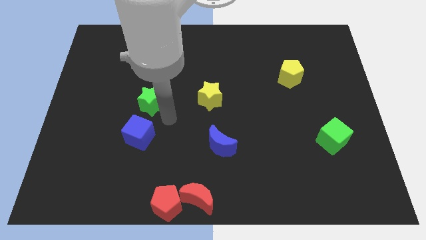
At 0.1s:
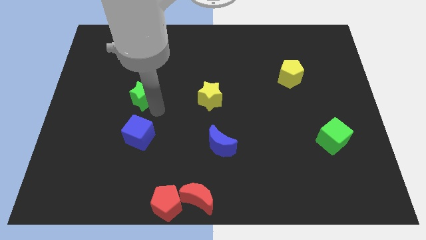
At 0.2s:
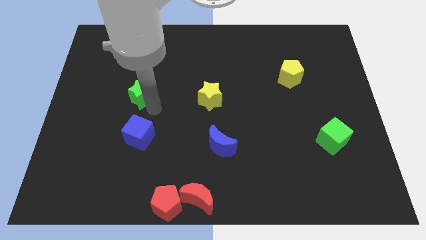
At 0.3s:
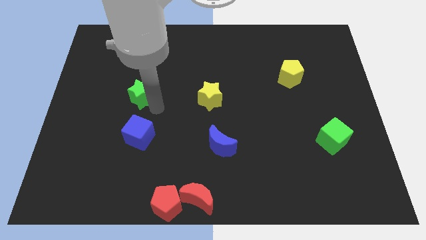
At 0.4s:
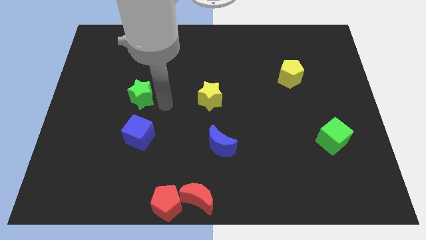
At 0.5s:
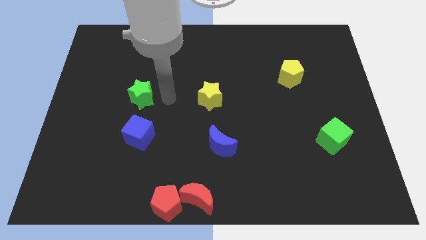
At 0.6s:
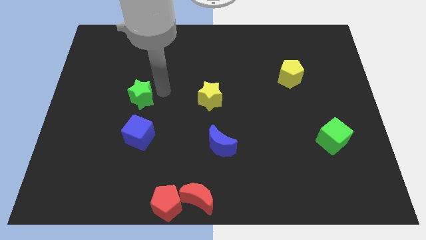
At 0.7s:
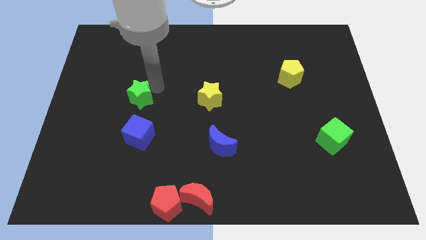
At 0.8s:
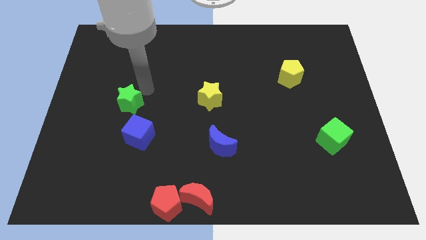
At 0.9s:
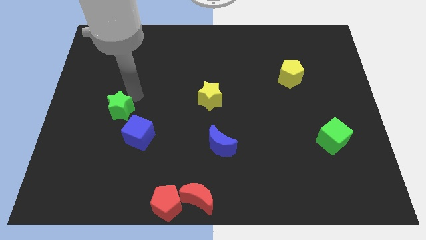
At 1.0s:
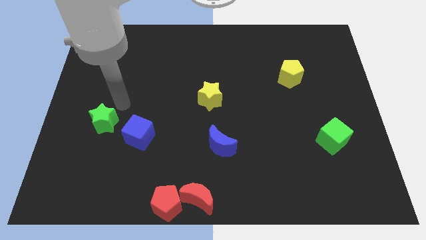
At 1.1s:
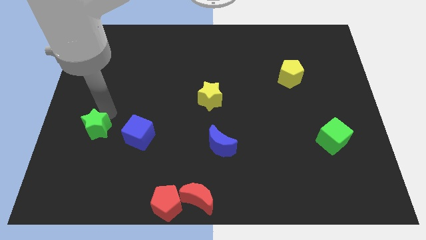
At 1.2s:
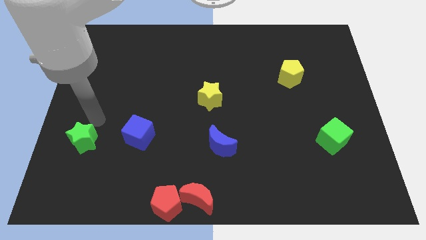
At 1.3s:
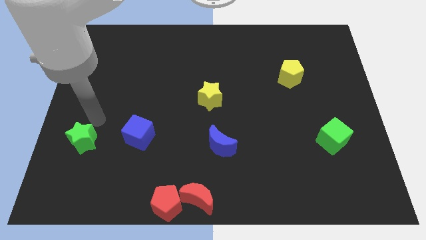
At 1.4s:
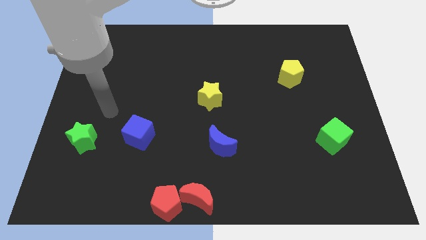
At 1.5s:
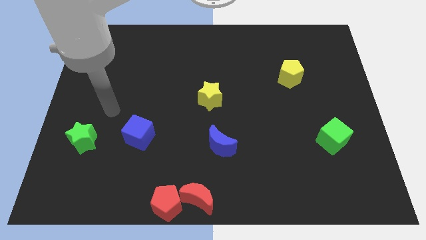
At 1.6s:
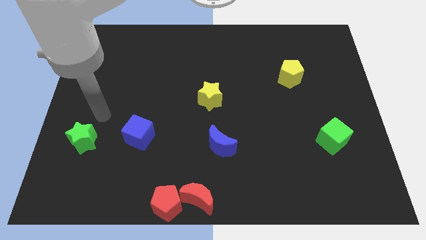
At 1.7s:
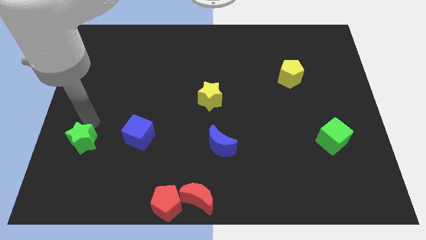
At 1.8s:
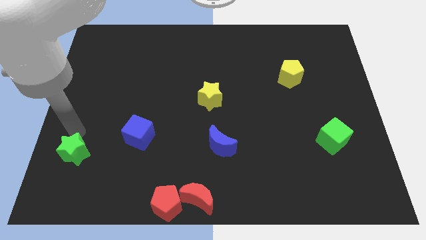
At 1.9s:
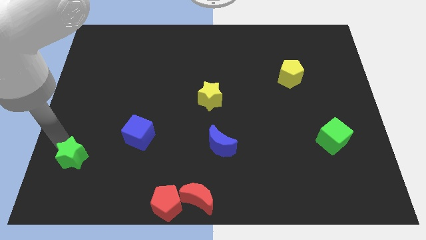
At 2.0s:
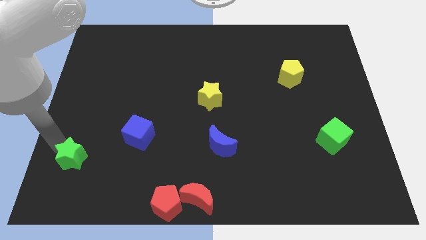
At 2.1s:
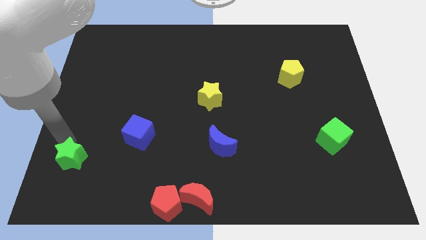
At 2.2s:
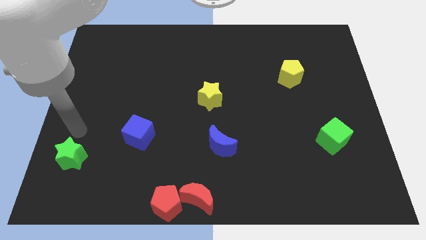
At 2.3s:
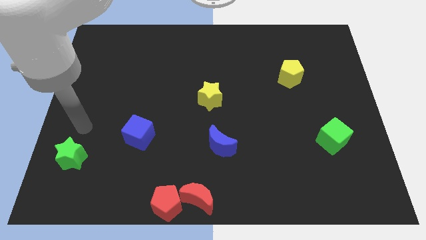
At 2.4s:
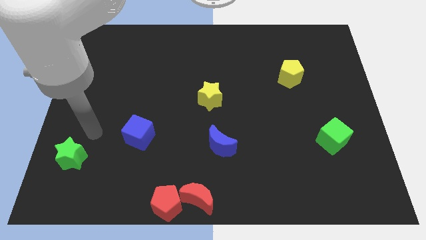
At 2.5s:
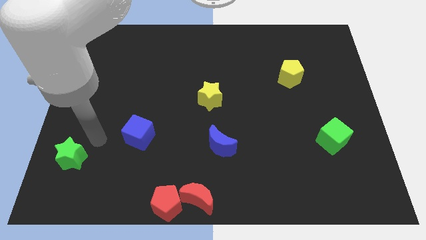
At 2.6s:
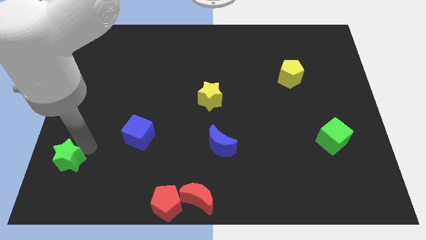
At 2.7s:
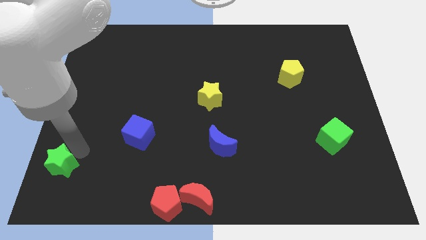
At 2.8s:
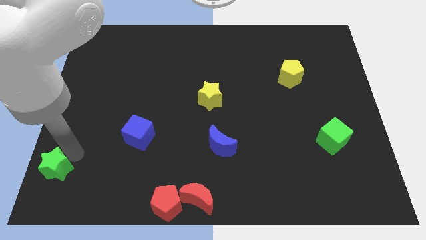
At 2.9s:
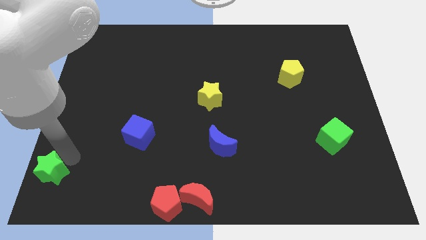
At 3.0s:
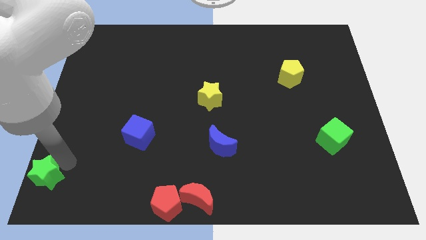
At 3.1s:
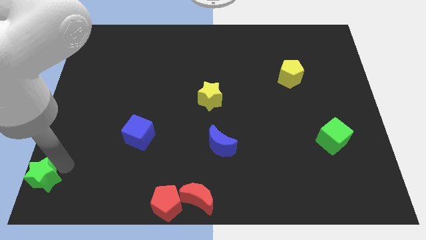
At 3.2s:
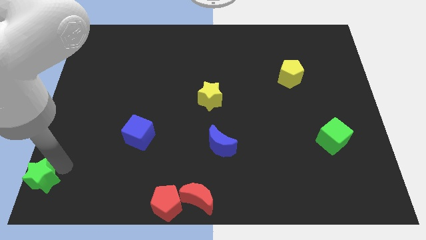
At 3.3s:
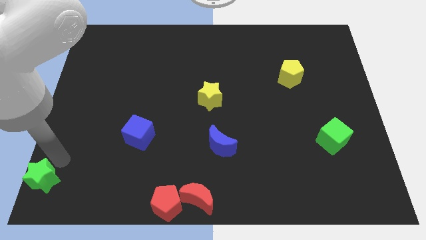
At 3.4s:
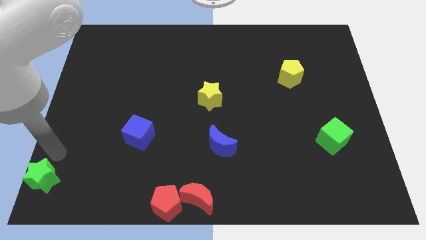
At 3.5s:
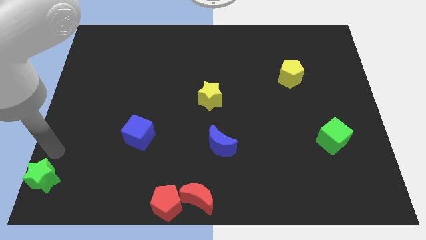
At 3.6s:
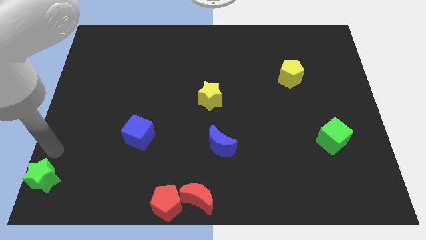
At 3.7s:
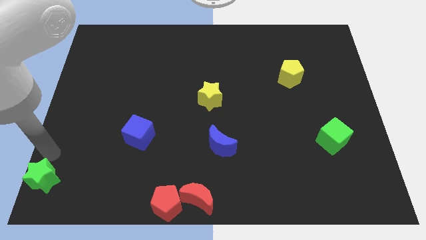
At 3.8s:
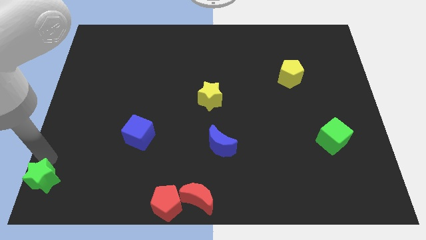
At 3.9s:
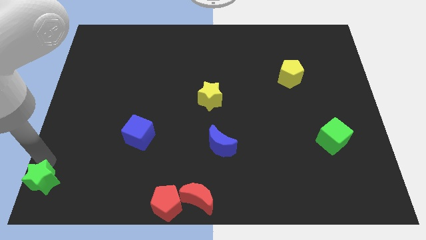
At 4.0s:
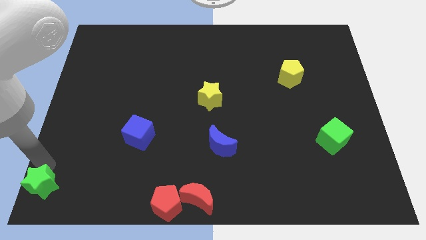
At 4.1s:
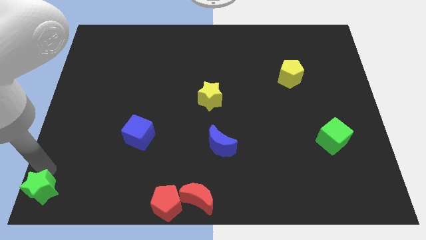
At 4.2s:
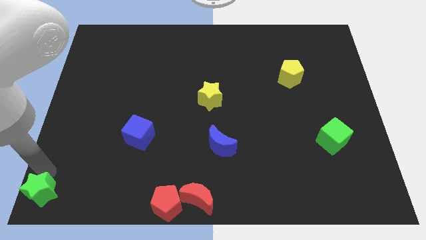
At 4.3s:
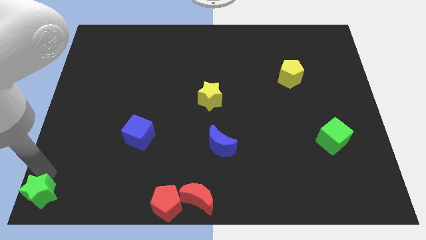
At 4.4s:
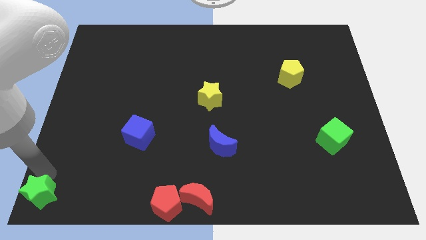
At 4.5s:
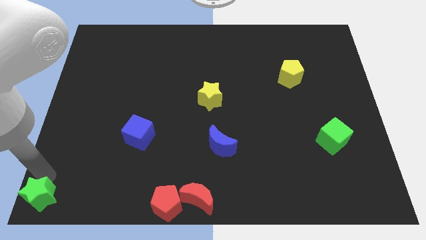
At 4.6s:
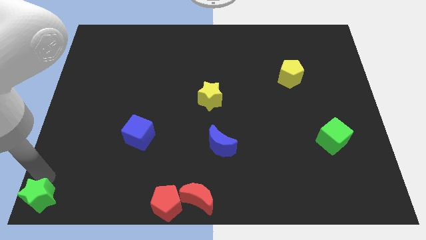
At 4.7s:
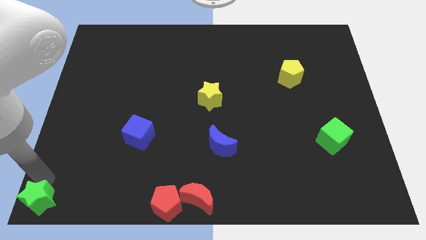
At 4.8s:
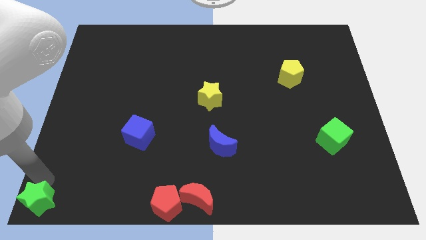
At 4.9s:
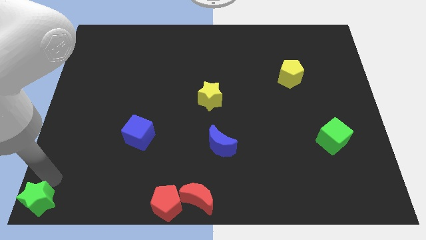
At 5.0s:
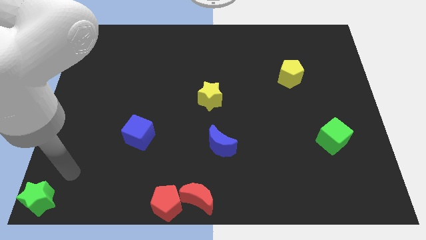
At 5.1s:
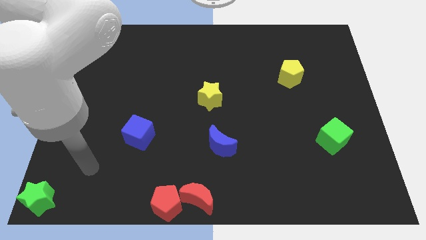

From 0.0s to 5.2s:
place the green star to the bottom left corner of the board

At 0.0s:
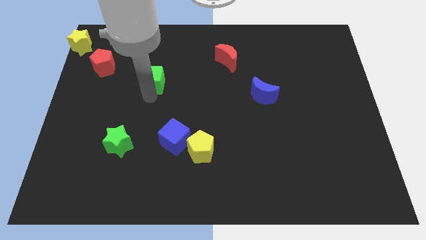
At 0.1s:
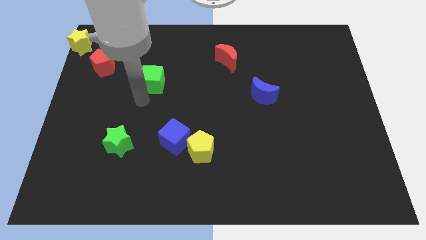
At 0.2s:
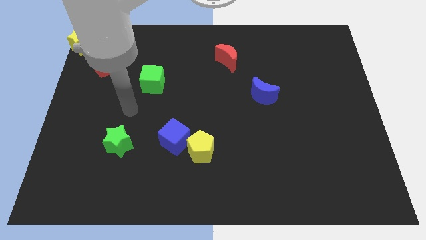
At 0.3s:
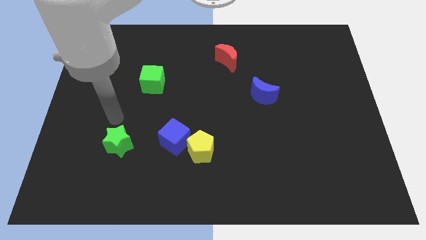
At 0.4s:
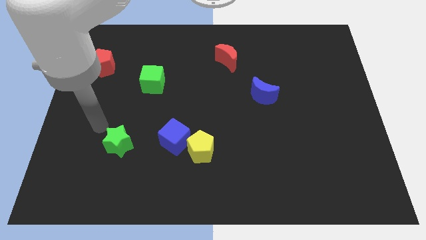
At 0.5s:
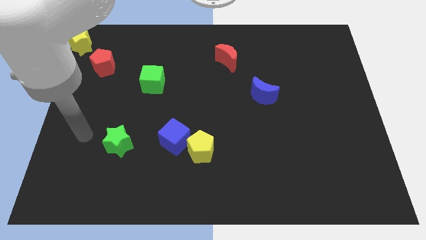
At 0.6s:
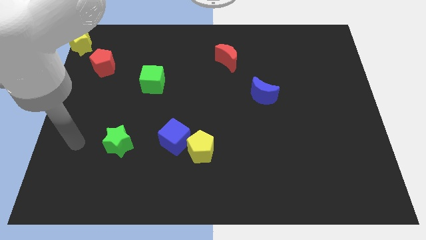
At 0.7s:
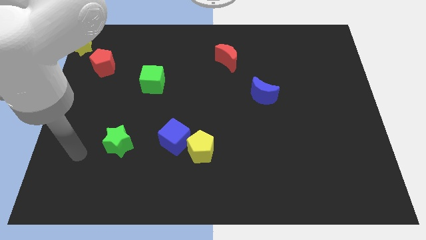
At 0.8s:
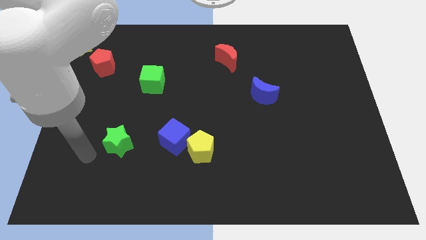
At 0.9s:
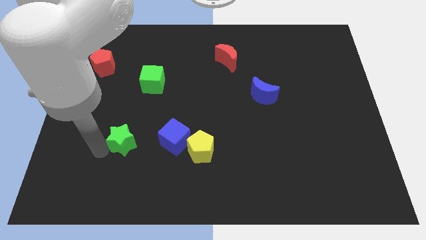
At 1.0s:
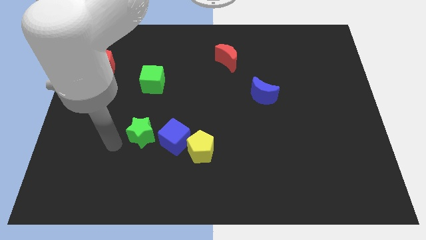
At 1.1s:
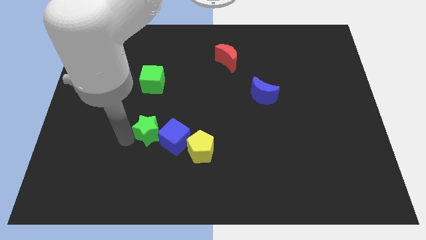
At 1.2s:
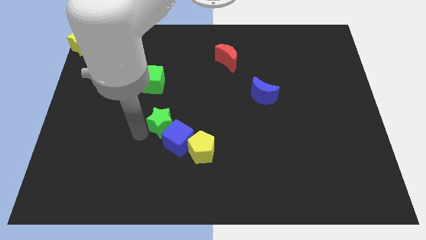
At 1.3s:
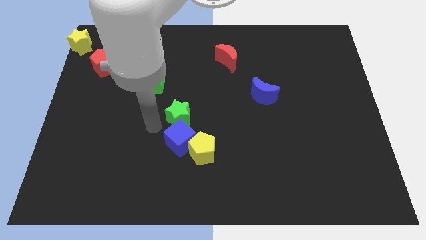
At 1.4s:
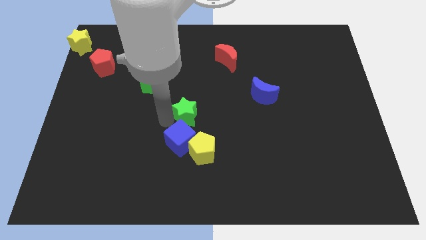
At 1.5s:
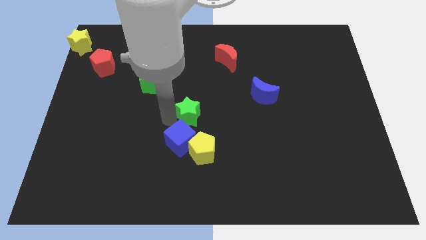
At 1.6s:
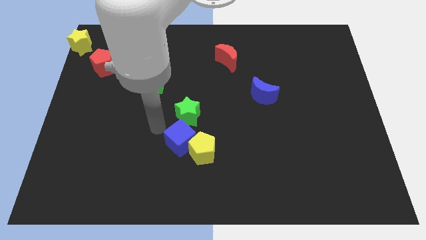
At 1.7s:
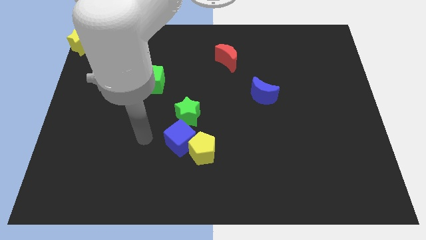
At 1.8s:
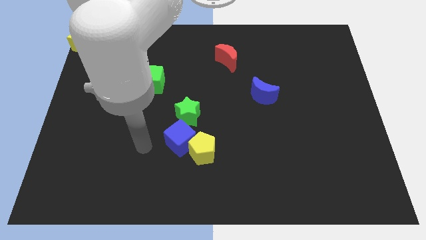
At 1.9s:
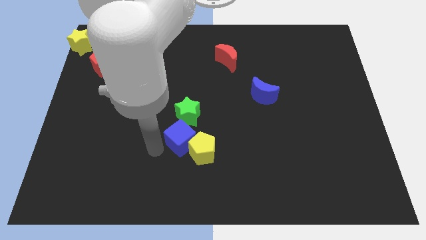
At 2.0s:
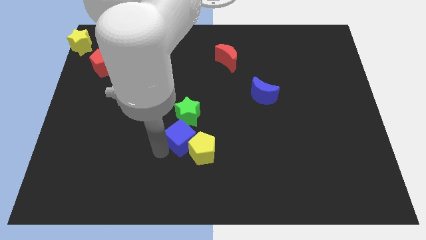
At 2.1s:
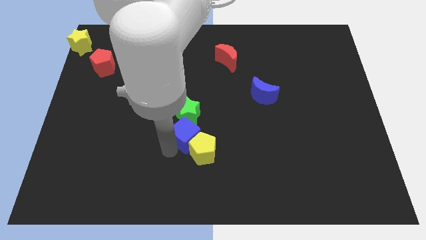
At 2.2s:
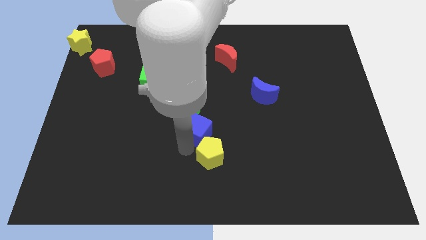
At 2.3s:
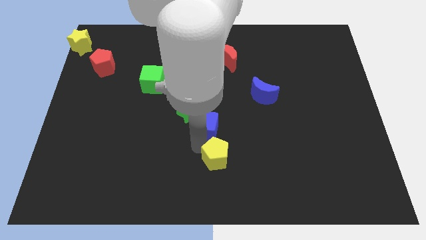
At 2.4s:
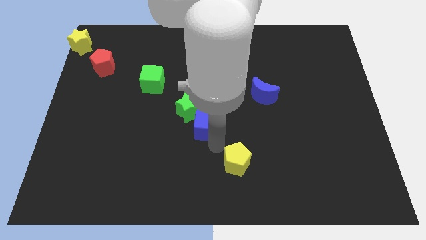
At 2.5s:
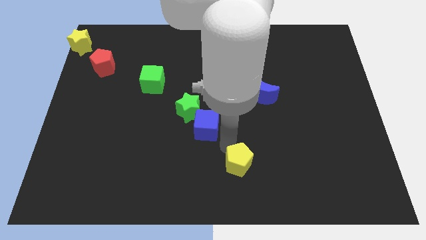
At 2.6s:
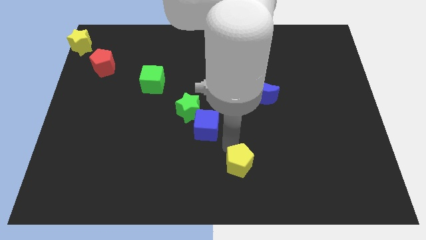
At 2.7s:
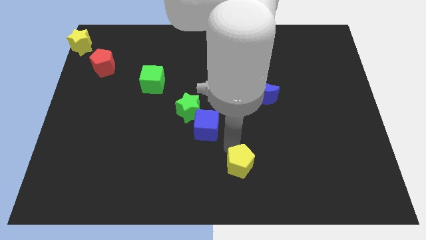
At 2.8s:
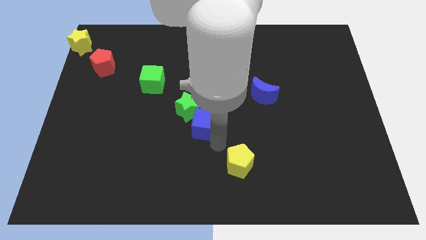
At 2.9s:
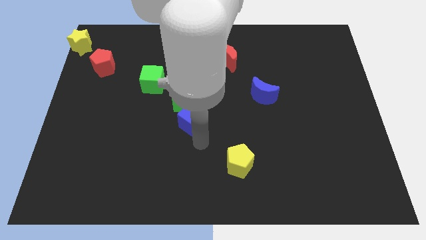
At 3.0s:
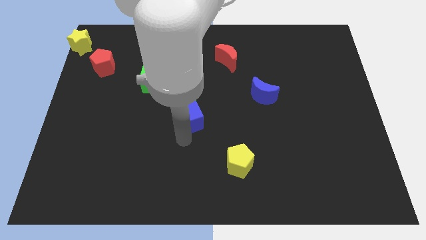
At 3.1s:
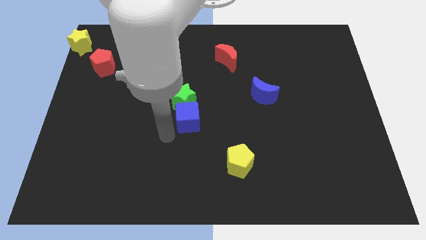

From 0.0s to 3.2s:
move the green star diagonally bottom right to the green cube

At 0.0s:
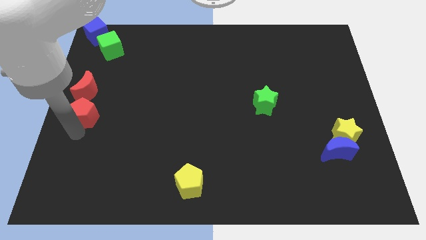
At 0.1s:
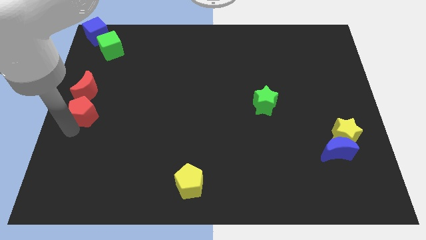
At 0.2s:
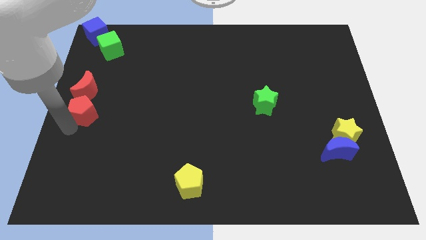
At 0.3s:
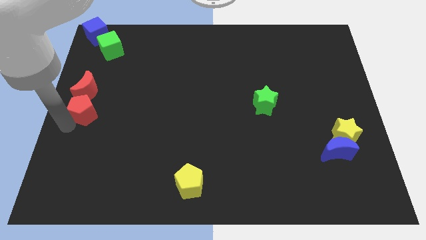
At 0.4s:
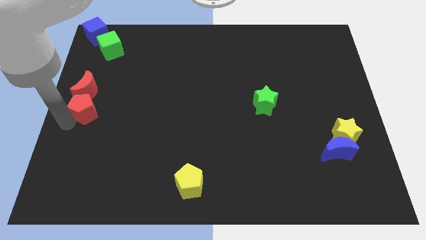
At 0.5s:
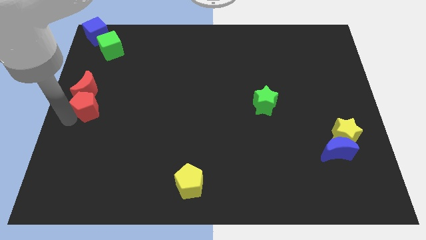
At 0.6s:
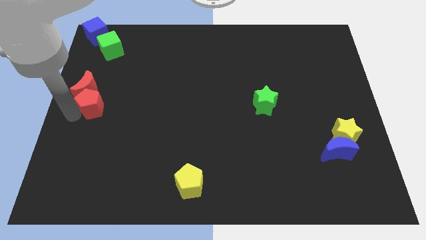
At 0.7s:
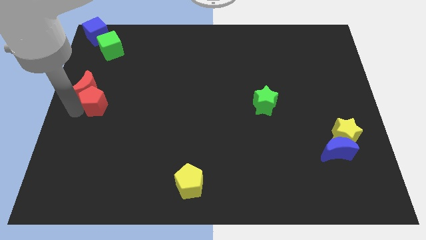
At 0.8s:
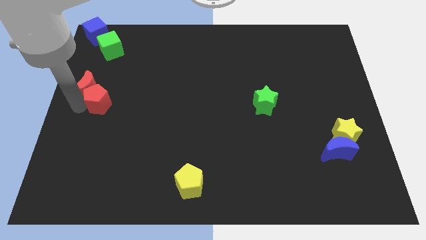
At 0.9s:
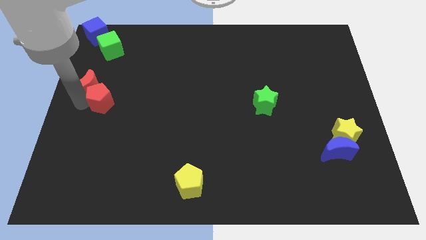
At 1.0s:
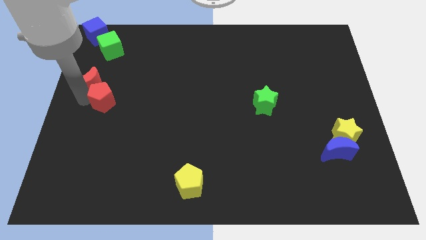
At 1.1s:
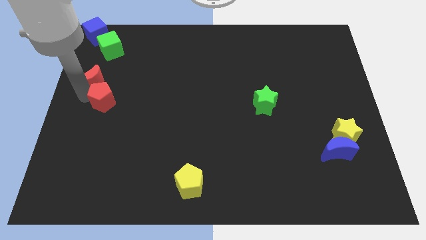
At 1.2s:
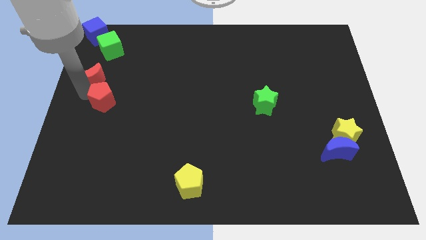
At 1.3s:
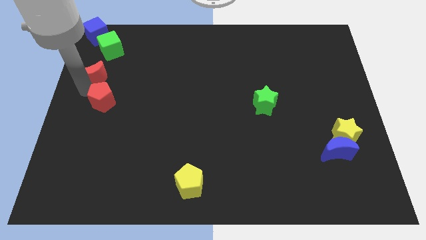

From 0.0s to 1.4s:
move red pentagon into red crescent
